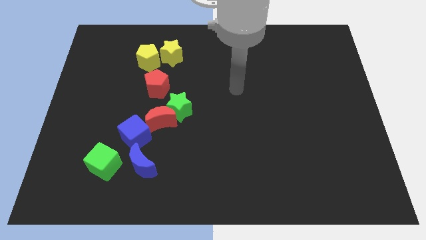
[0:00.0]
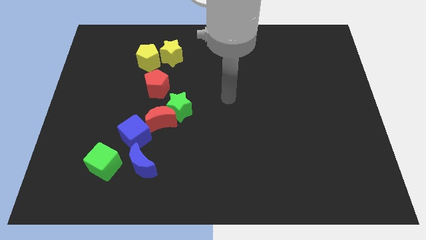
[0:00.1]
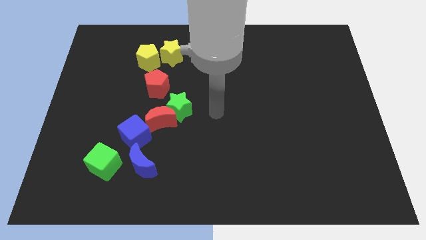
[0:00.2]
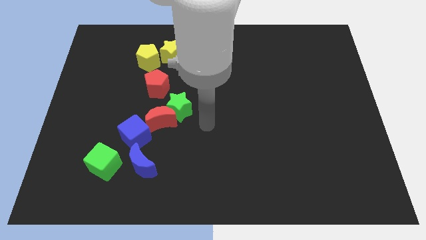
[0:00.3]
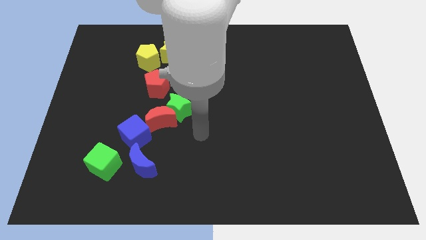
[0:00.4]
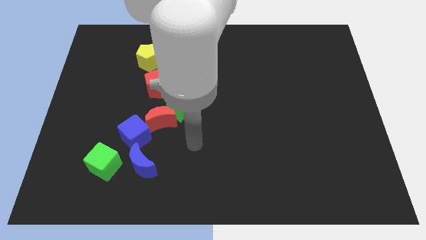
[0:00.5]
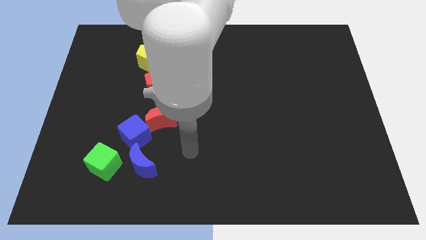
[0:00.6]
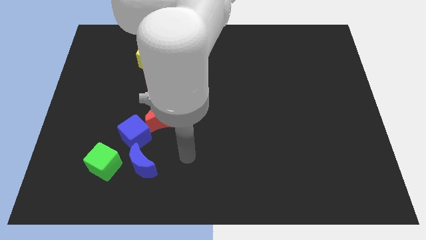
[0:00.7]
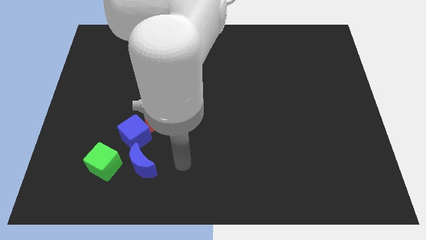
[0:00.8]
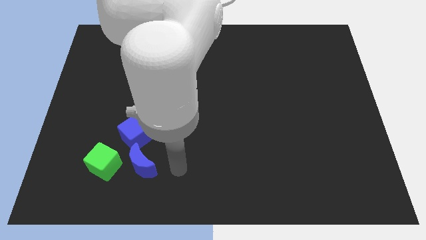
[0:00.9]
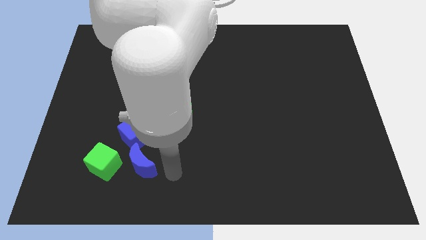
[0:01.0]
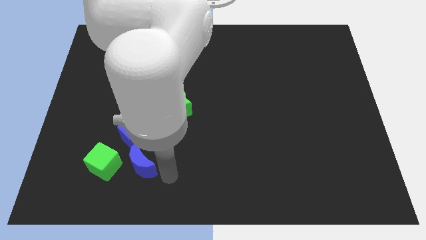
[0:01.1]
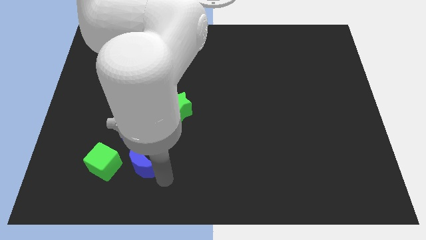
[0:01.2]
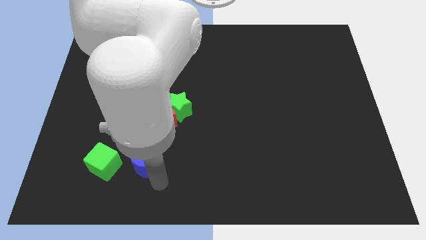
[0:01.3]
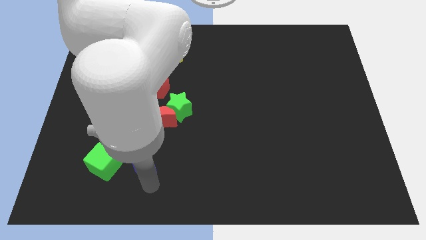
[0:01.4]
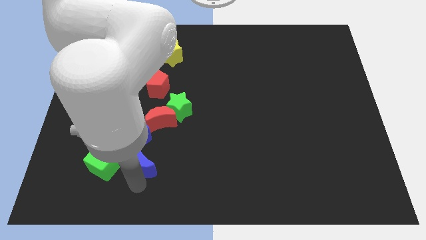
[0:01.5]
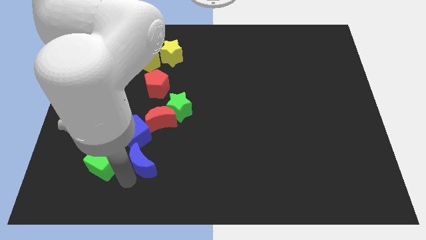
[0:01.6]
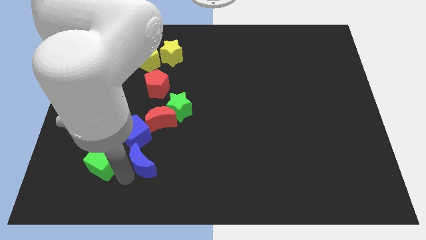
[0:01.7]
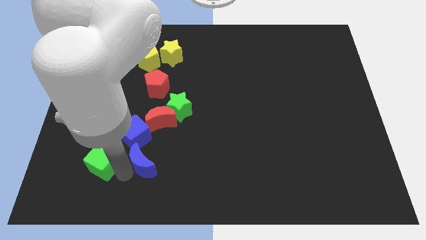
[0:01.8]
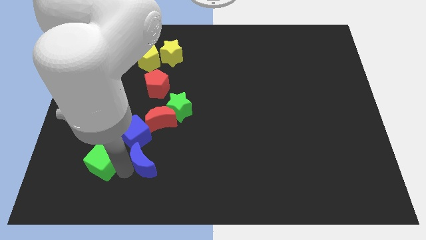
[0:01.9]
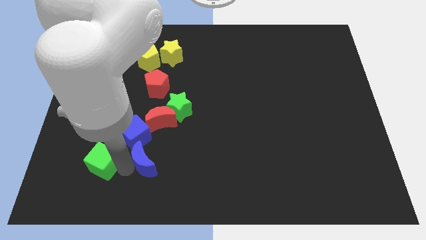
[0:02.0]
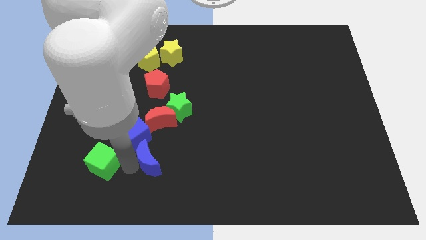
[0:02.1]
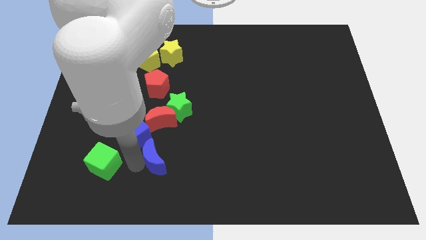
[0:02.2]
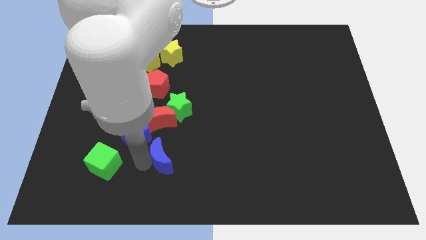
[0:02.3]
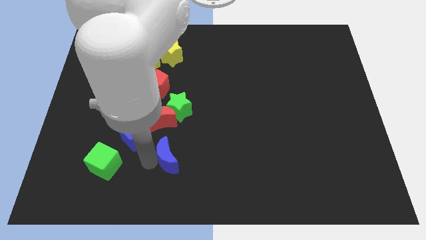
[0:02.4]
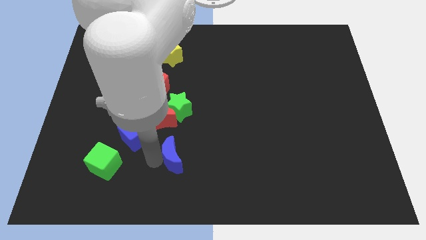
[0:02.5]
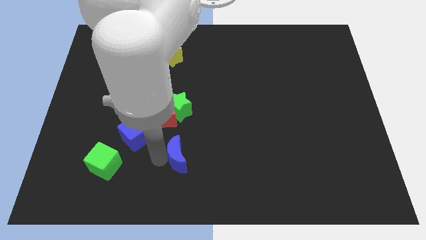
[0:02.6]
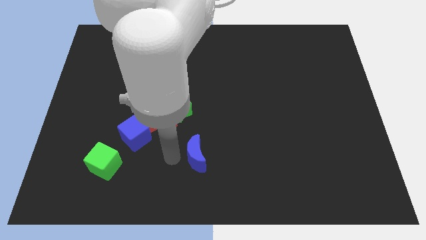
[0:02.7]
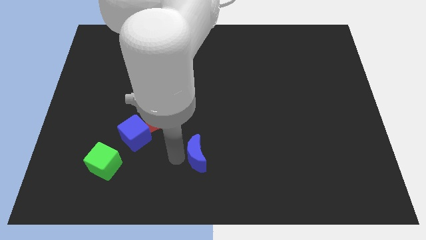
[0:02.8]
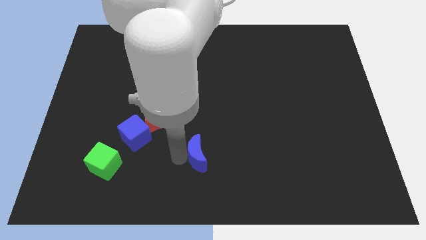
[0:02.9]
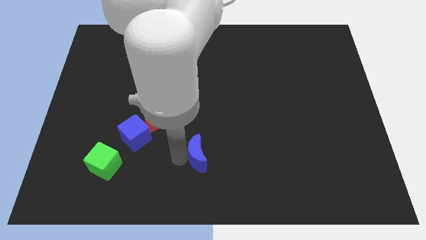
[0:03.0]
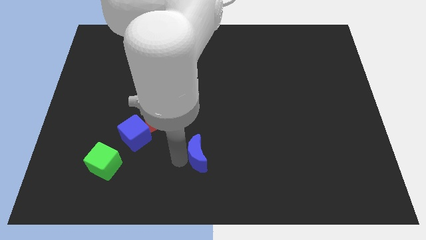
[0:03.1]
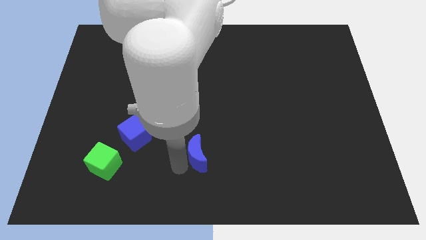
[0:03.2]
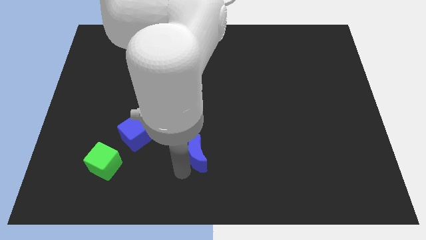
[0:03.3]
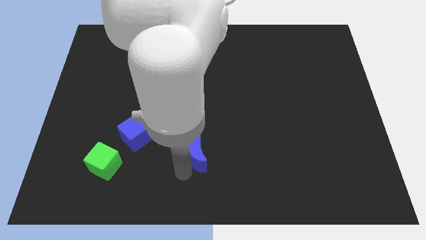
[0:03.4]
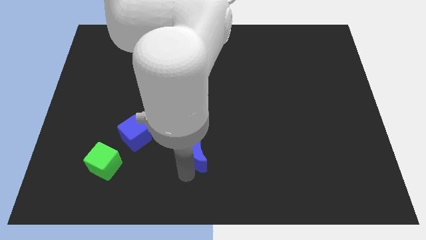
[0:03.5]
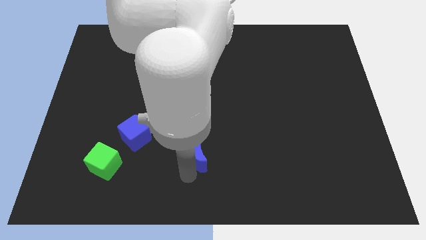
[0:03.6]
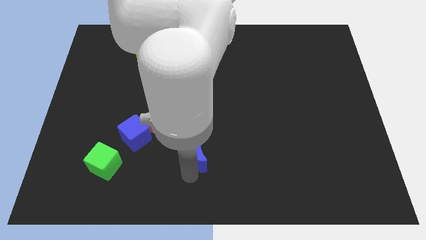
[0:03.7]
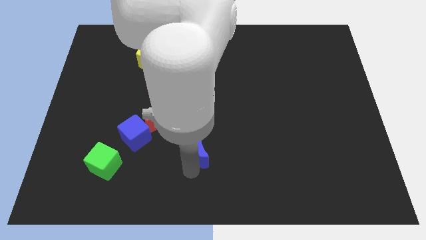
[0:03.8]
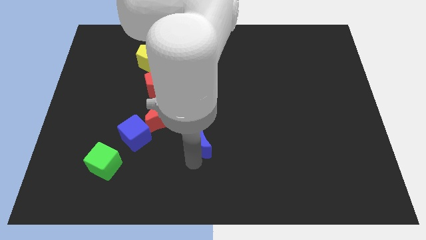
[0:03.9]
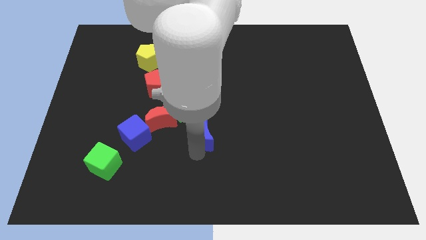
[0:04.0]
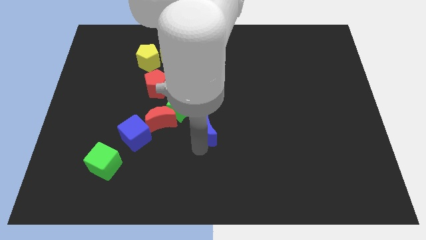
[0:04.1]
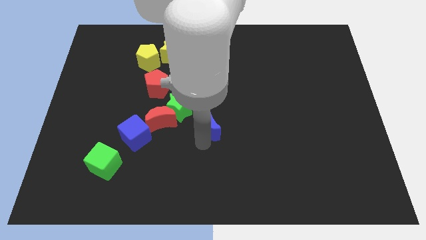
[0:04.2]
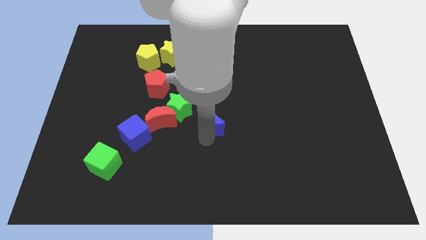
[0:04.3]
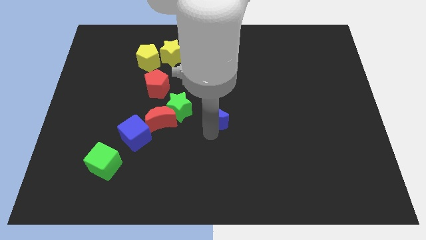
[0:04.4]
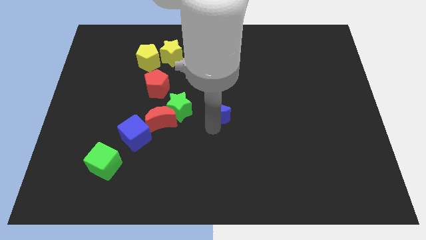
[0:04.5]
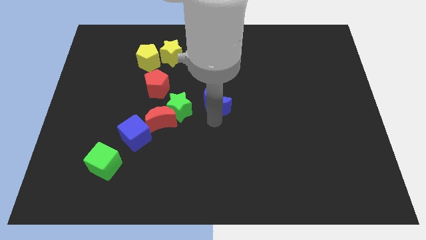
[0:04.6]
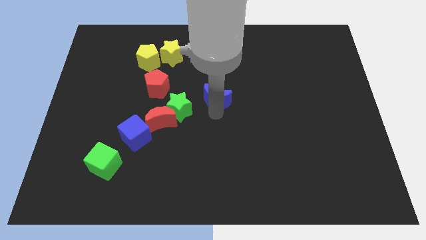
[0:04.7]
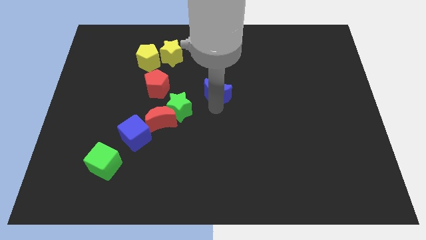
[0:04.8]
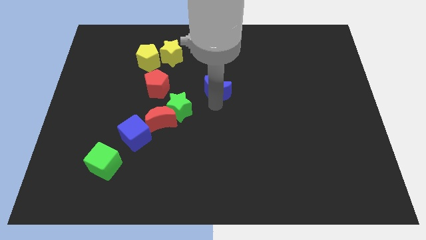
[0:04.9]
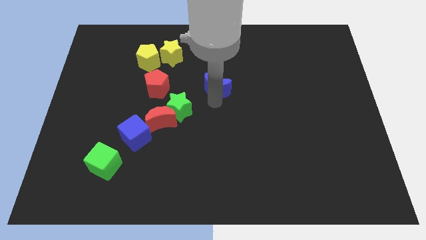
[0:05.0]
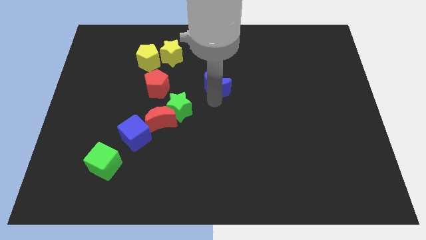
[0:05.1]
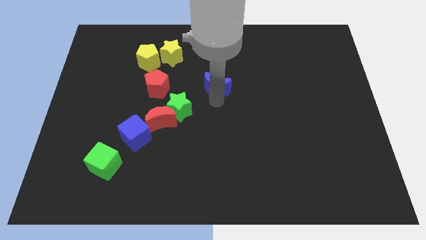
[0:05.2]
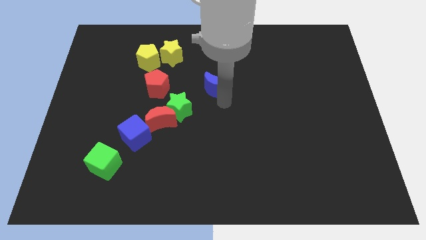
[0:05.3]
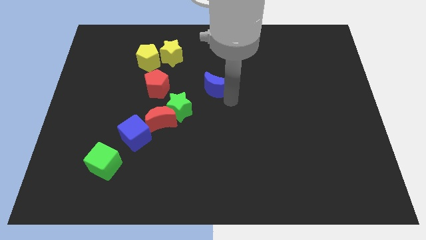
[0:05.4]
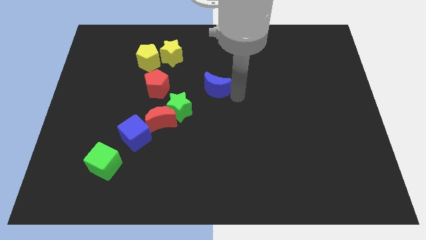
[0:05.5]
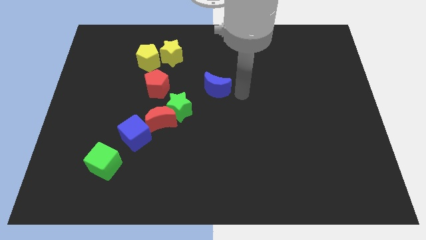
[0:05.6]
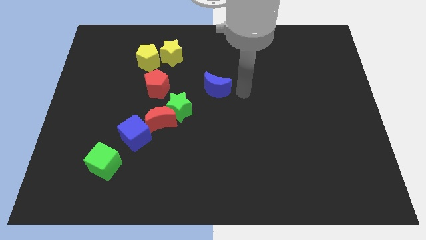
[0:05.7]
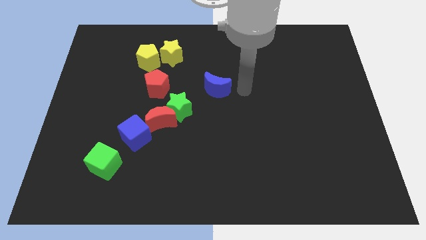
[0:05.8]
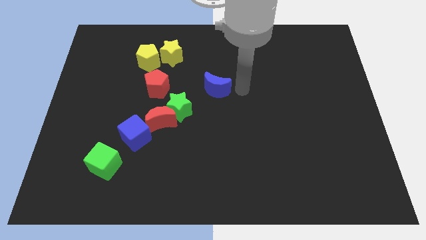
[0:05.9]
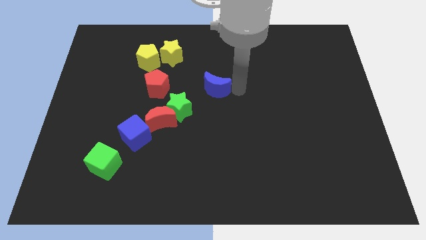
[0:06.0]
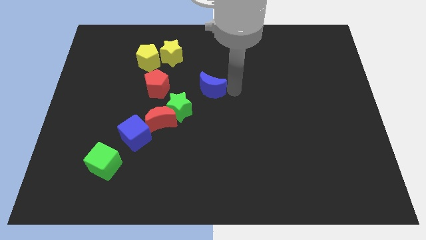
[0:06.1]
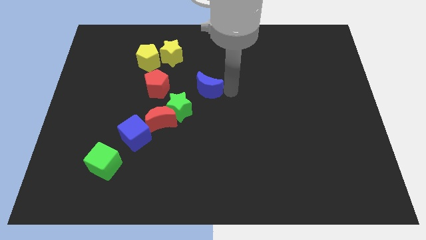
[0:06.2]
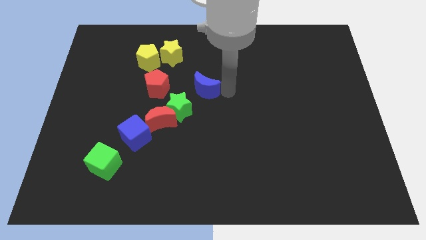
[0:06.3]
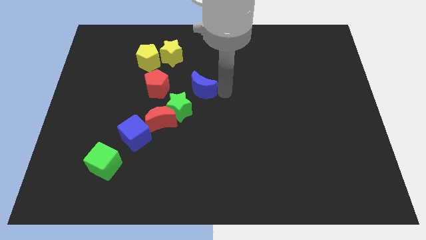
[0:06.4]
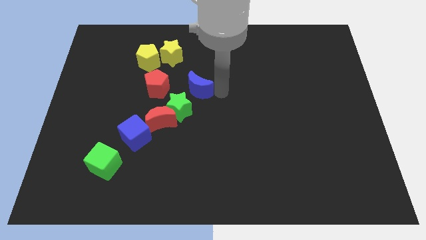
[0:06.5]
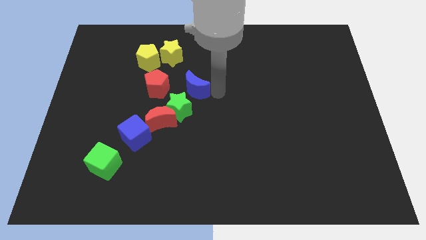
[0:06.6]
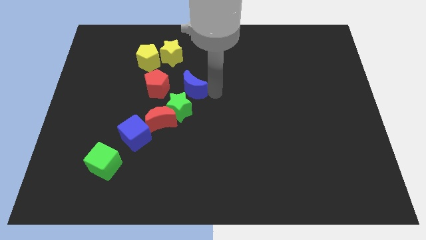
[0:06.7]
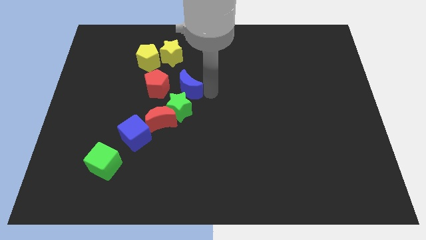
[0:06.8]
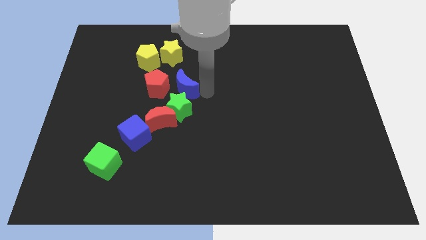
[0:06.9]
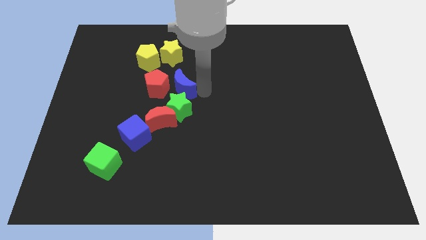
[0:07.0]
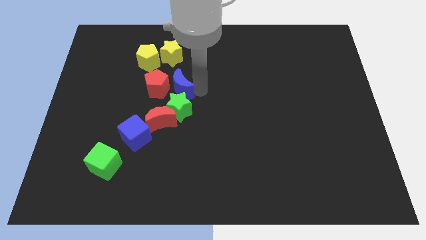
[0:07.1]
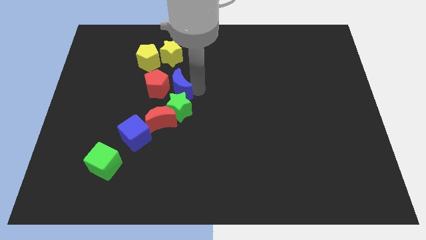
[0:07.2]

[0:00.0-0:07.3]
push the blue moon next to the red pentagon

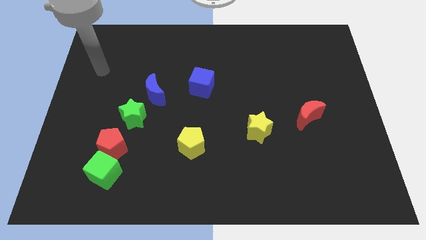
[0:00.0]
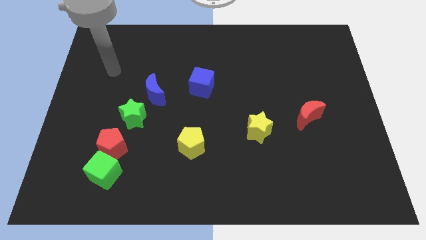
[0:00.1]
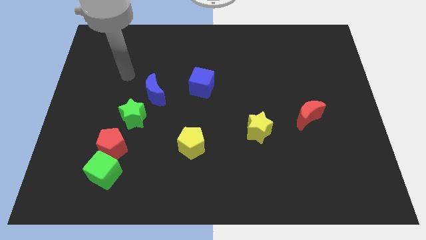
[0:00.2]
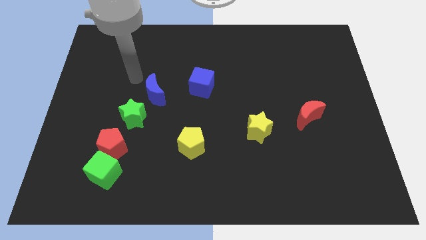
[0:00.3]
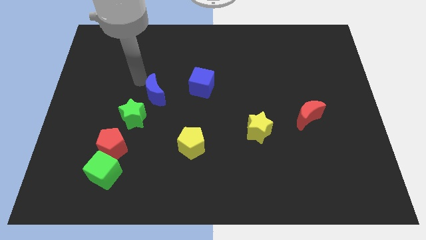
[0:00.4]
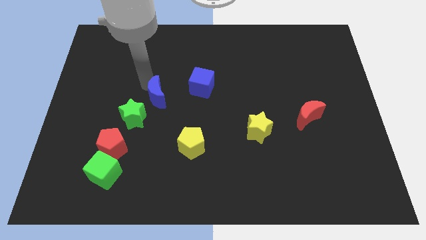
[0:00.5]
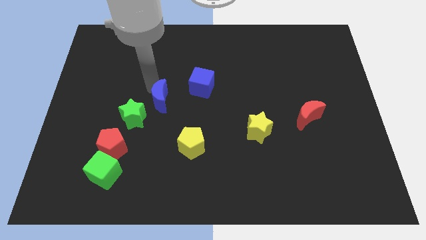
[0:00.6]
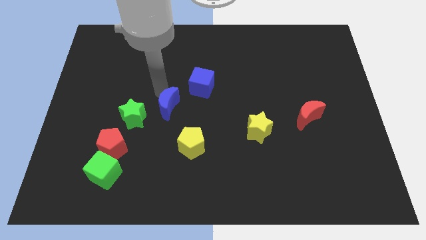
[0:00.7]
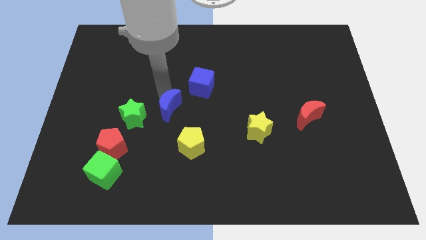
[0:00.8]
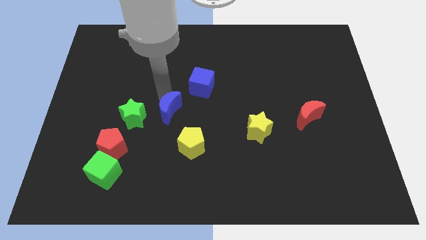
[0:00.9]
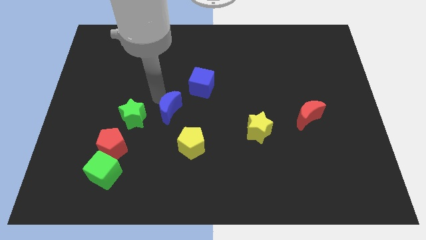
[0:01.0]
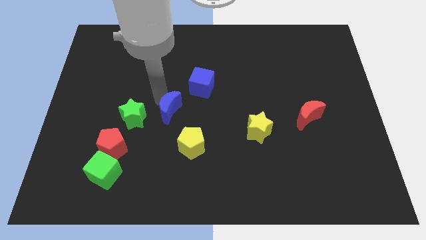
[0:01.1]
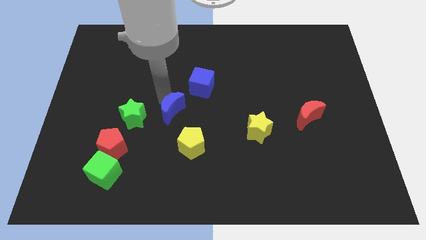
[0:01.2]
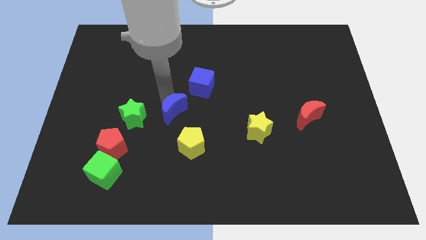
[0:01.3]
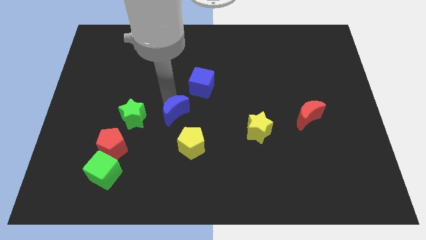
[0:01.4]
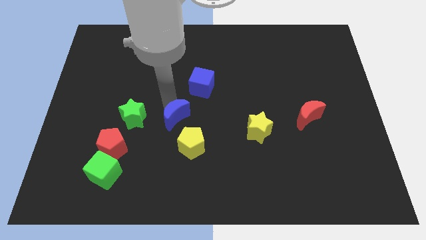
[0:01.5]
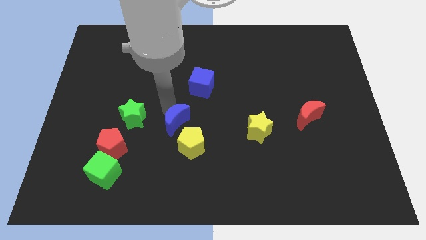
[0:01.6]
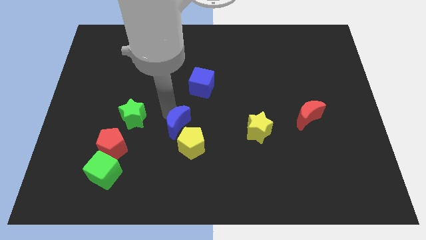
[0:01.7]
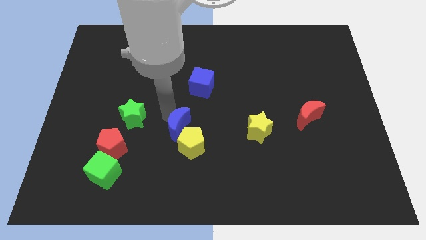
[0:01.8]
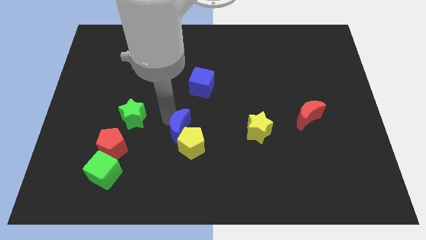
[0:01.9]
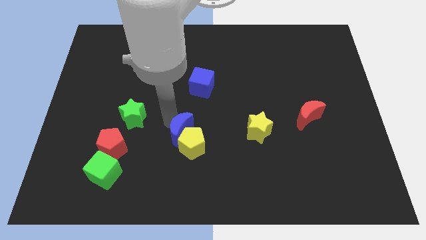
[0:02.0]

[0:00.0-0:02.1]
put the blue moon close to the yellow pentagon
